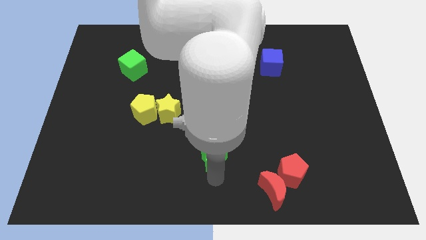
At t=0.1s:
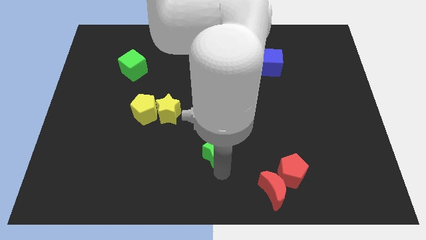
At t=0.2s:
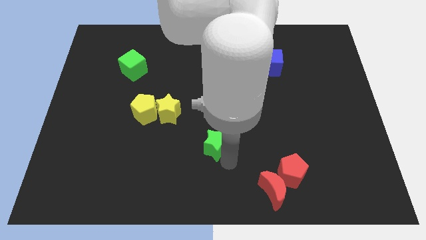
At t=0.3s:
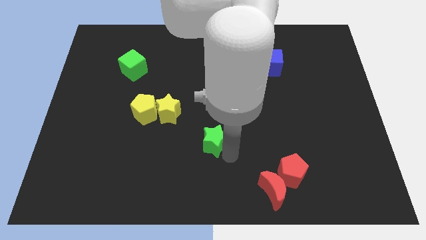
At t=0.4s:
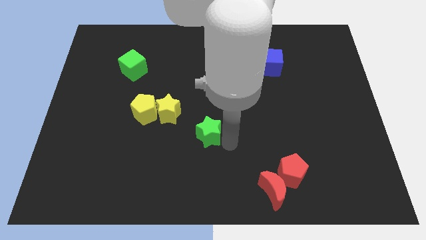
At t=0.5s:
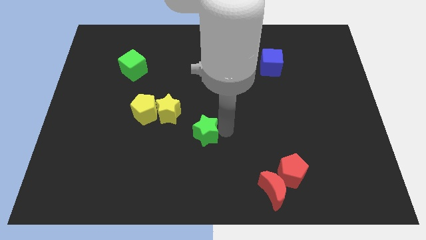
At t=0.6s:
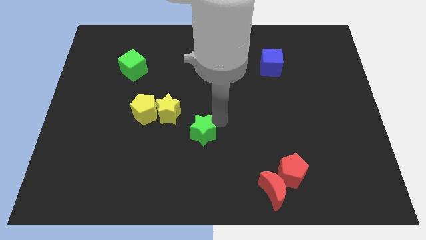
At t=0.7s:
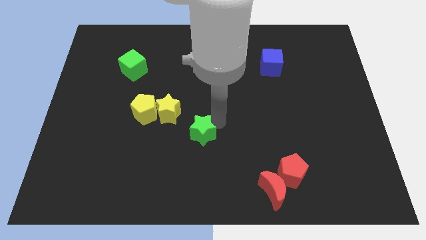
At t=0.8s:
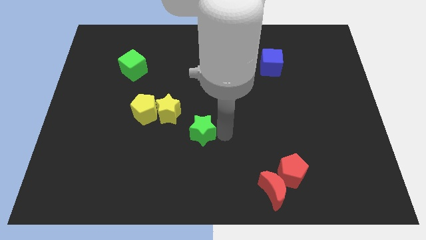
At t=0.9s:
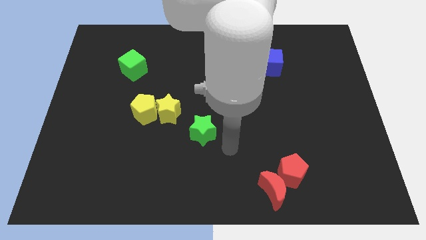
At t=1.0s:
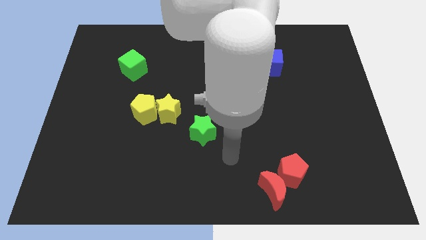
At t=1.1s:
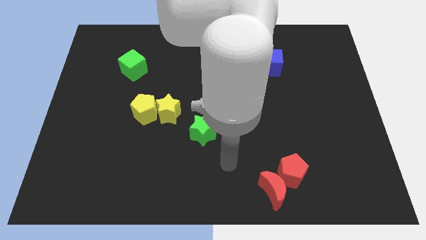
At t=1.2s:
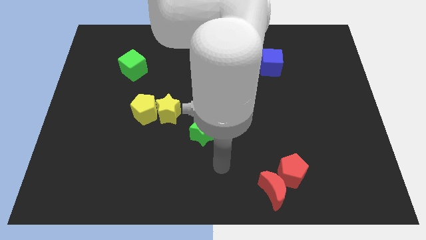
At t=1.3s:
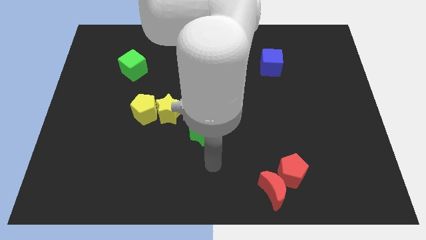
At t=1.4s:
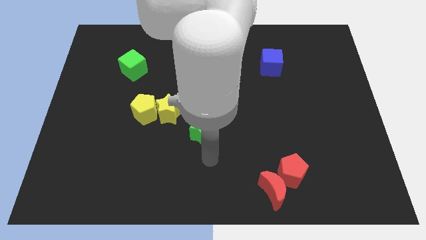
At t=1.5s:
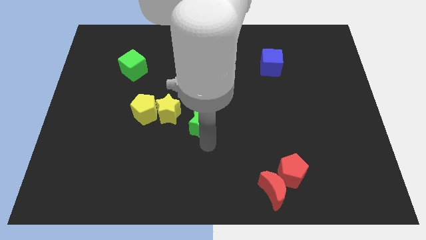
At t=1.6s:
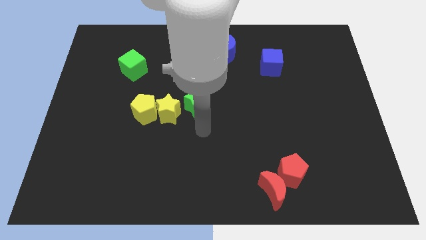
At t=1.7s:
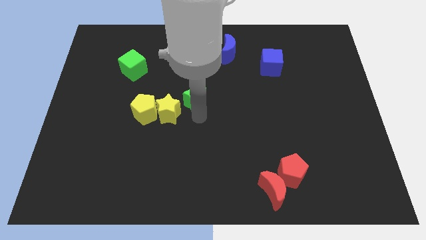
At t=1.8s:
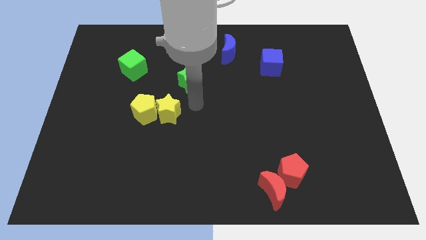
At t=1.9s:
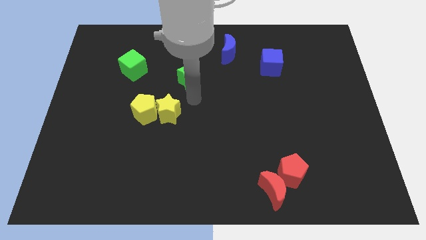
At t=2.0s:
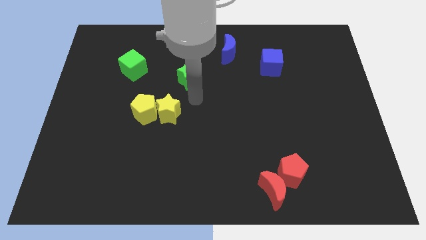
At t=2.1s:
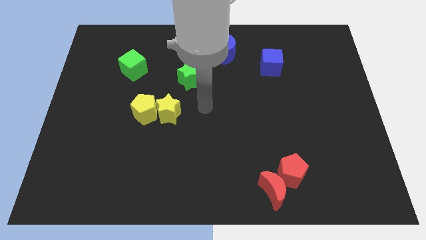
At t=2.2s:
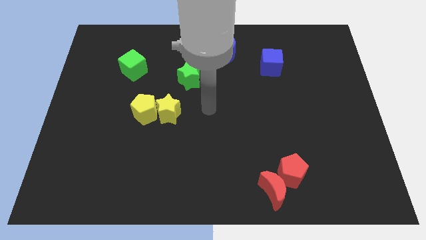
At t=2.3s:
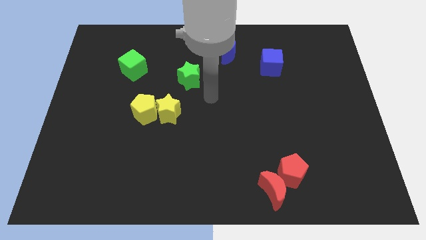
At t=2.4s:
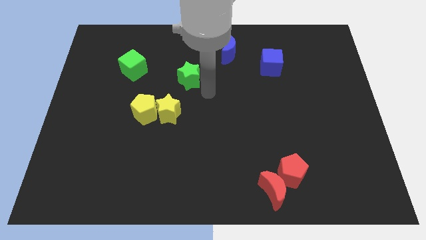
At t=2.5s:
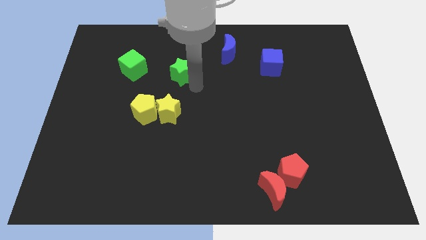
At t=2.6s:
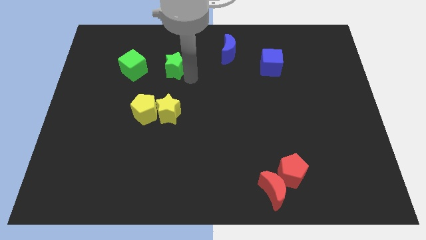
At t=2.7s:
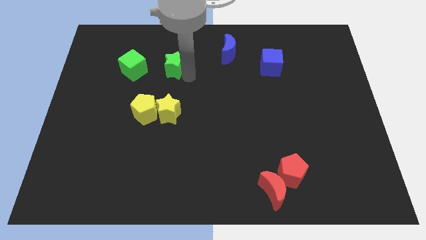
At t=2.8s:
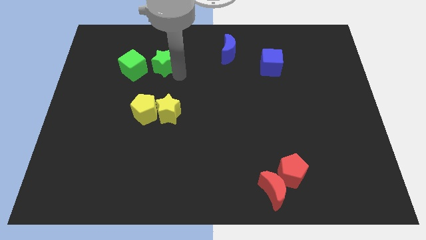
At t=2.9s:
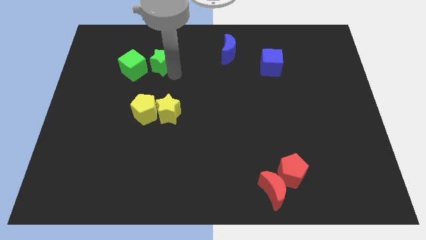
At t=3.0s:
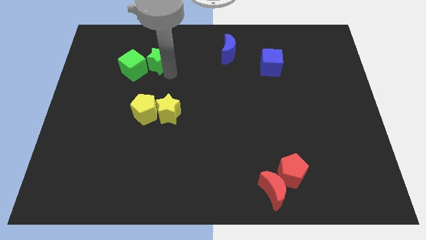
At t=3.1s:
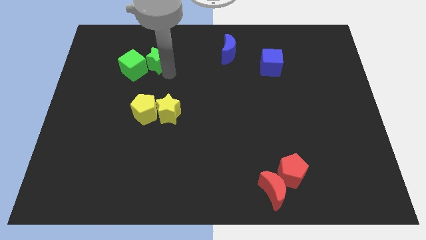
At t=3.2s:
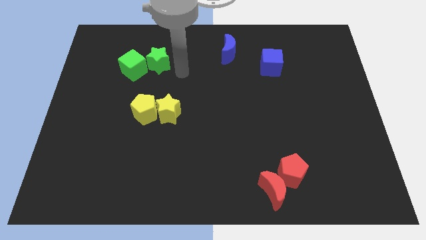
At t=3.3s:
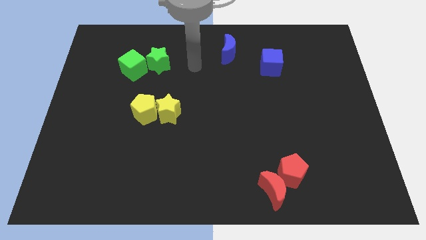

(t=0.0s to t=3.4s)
move the green star to the right side of the green cube

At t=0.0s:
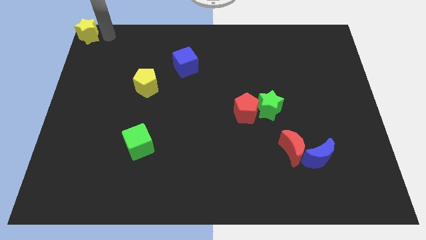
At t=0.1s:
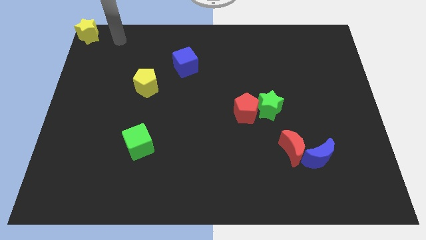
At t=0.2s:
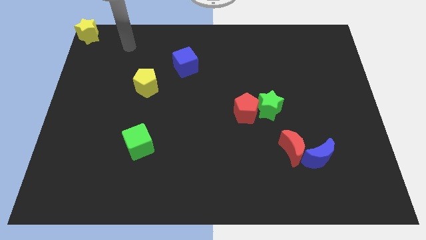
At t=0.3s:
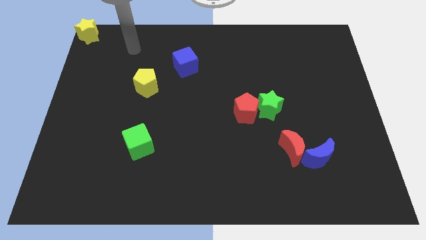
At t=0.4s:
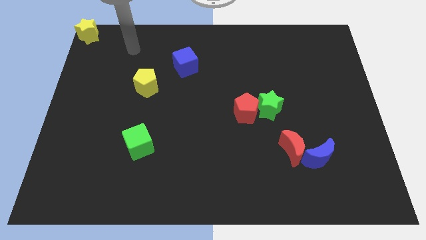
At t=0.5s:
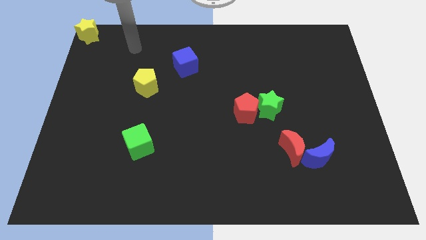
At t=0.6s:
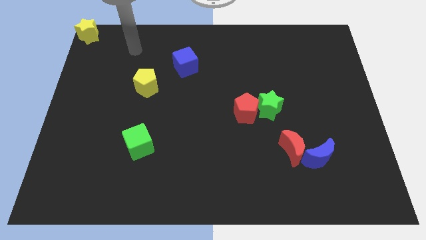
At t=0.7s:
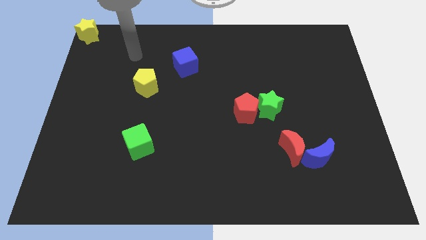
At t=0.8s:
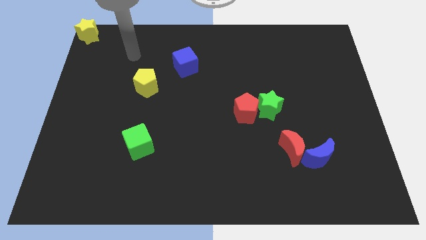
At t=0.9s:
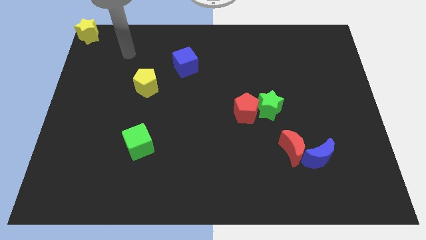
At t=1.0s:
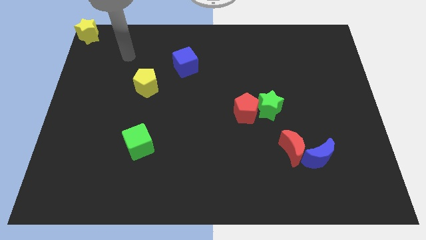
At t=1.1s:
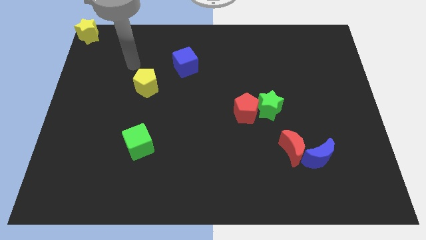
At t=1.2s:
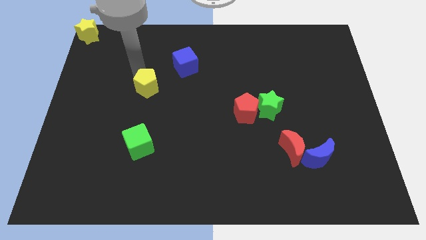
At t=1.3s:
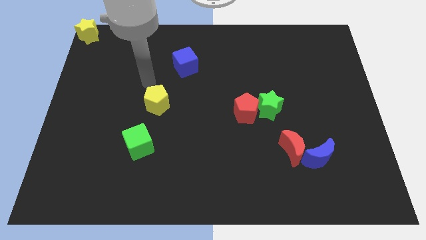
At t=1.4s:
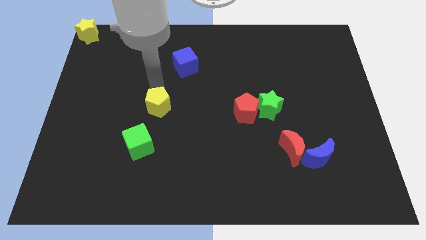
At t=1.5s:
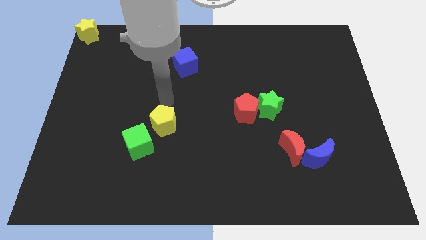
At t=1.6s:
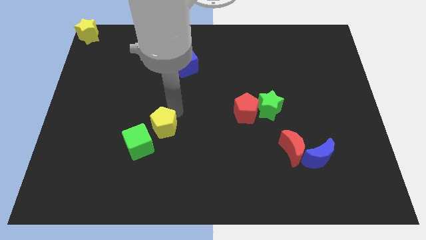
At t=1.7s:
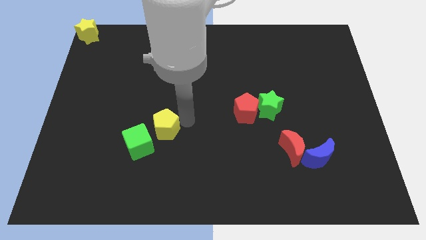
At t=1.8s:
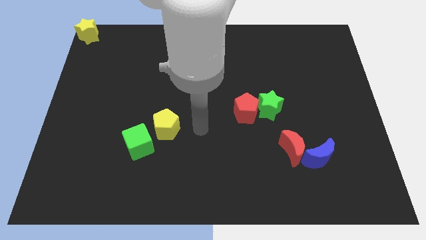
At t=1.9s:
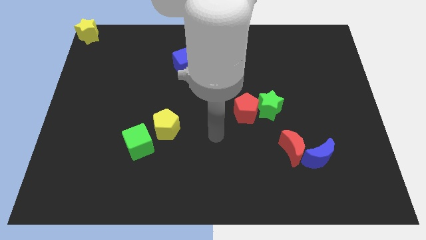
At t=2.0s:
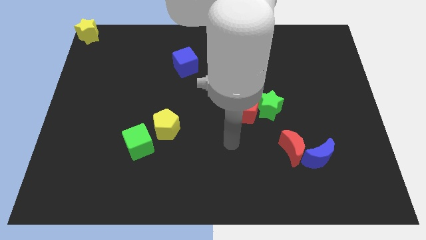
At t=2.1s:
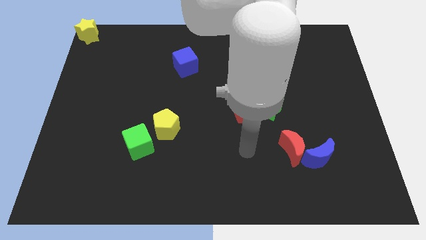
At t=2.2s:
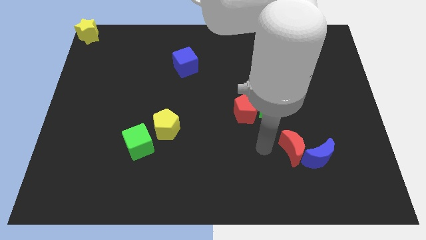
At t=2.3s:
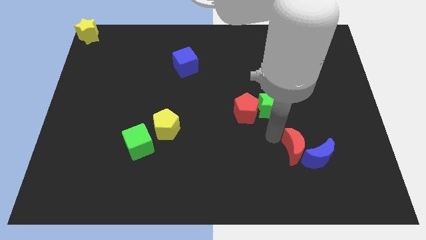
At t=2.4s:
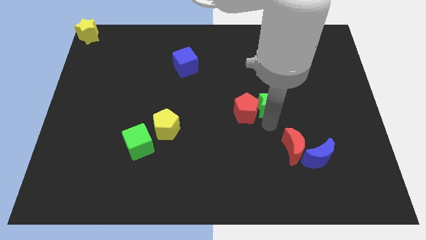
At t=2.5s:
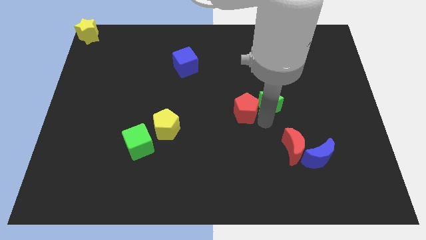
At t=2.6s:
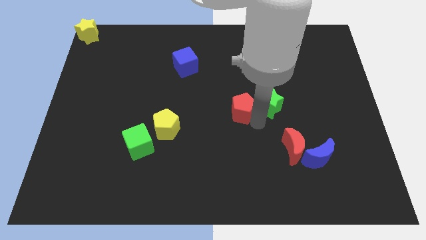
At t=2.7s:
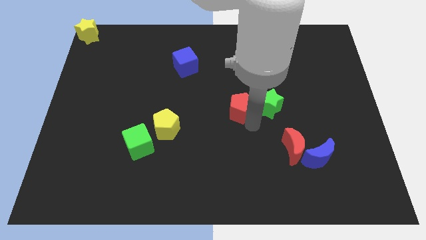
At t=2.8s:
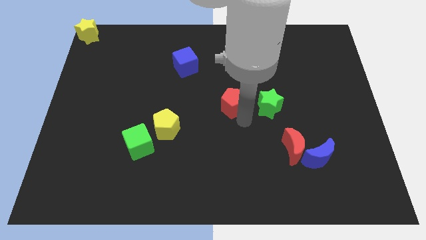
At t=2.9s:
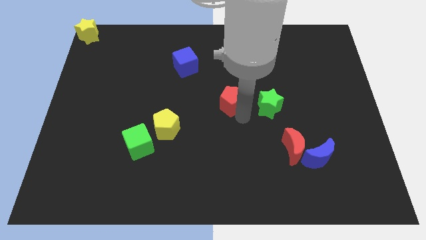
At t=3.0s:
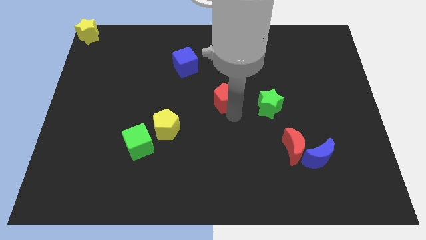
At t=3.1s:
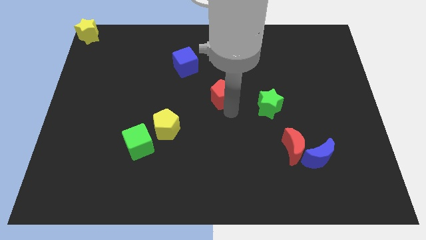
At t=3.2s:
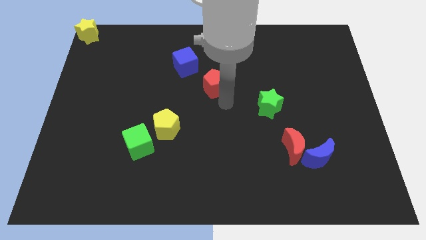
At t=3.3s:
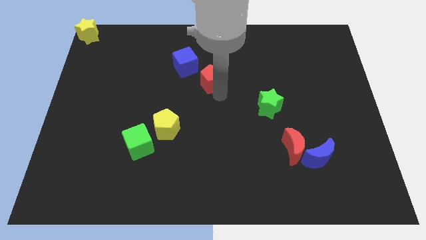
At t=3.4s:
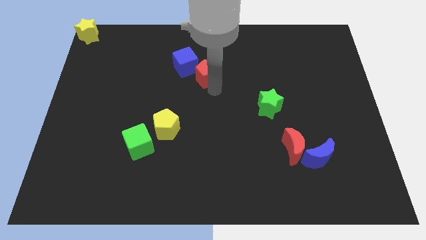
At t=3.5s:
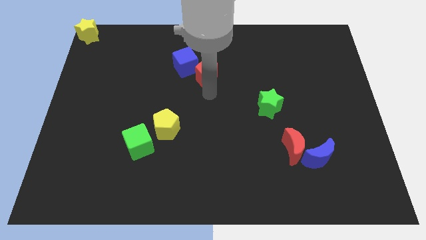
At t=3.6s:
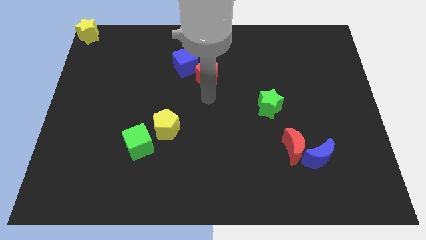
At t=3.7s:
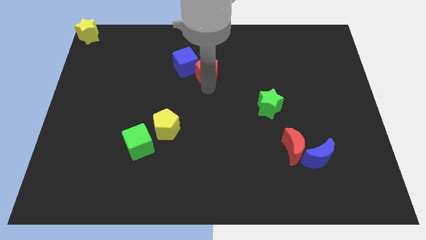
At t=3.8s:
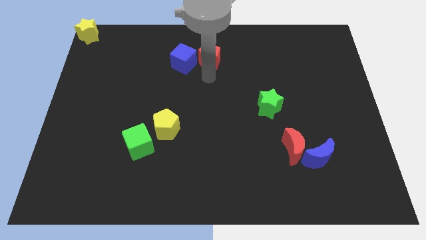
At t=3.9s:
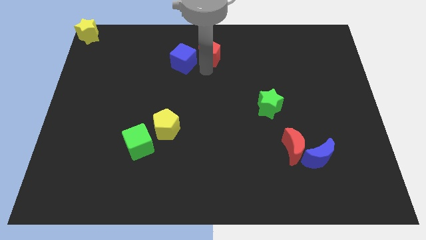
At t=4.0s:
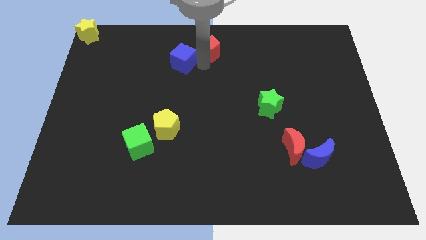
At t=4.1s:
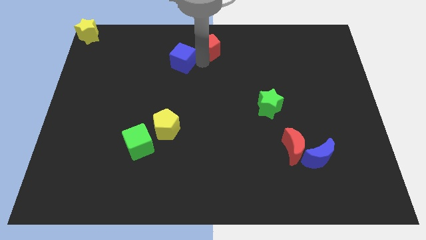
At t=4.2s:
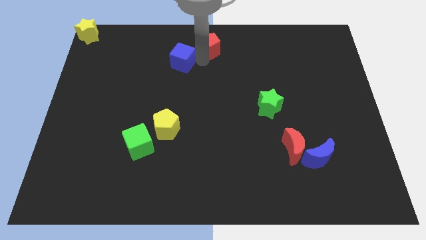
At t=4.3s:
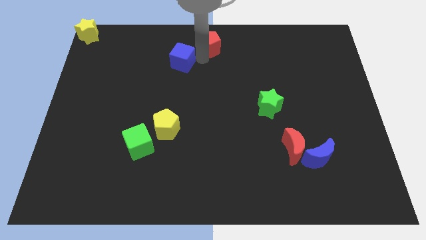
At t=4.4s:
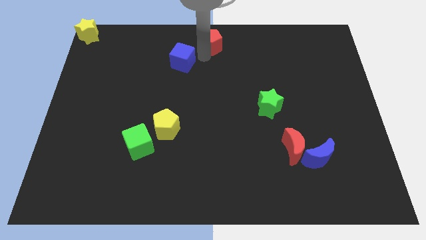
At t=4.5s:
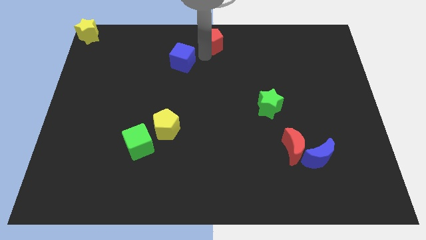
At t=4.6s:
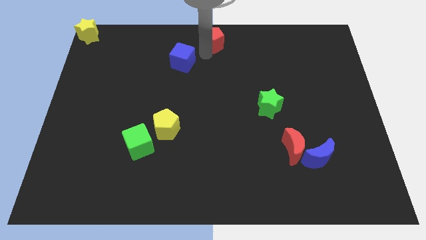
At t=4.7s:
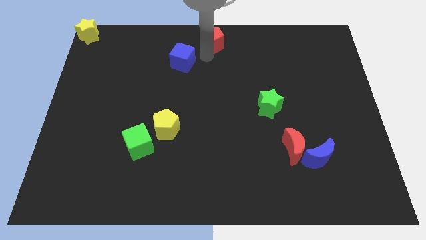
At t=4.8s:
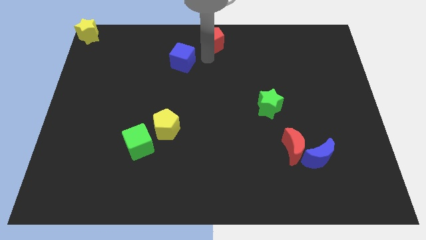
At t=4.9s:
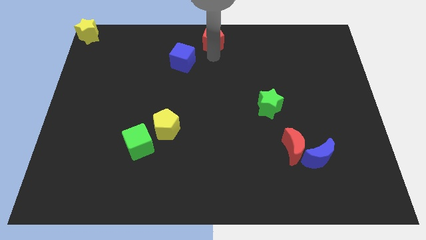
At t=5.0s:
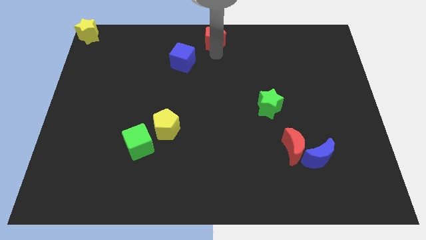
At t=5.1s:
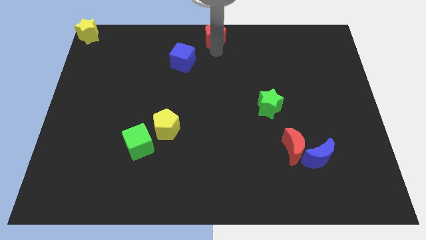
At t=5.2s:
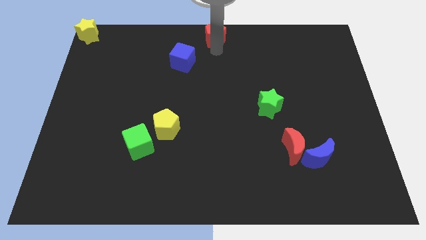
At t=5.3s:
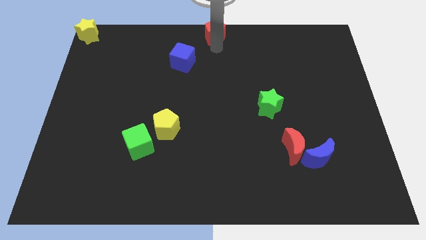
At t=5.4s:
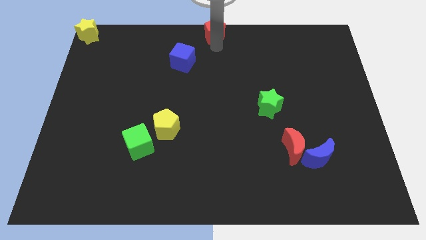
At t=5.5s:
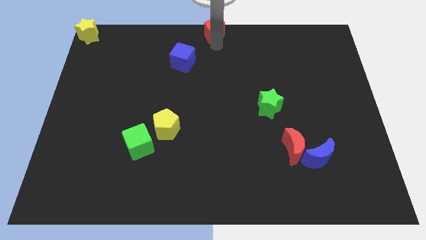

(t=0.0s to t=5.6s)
move red pentagon to the top center
